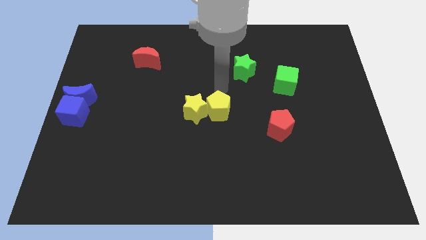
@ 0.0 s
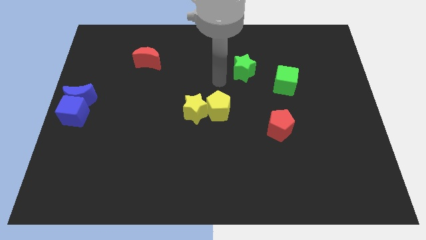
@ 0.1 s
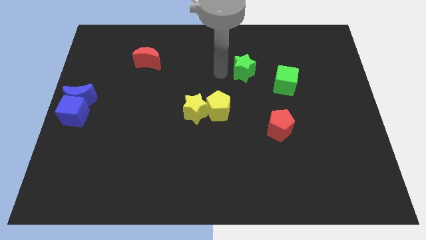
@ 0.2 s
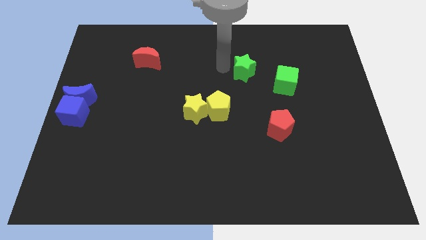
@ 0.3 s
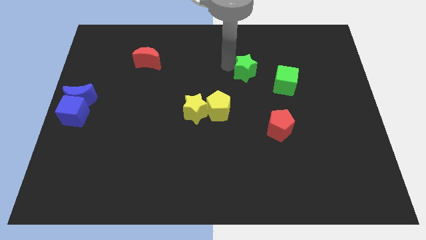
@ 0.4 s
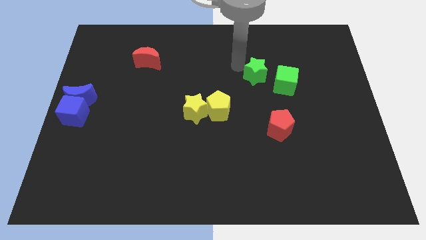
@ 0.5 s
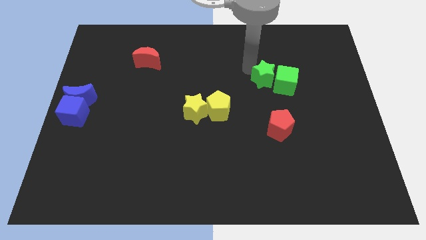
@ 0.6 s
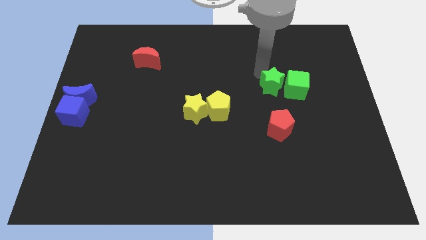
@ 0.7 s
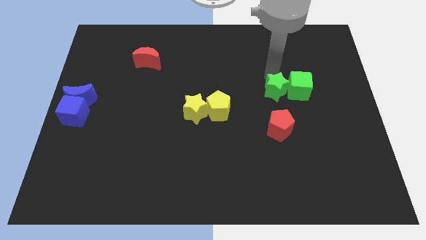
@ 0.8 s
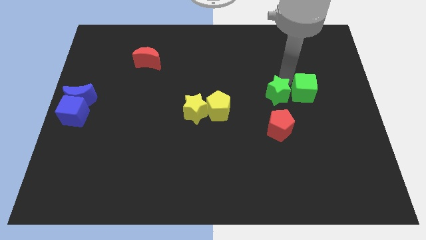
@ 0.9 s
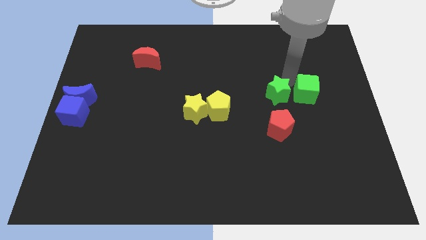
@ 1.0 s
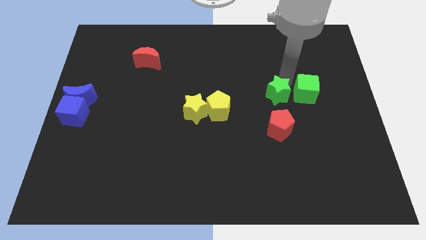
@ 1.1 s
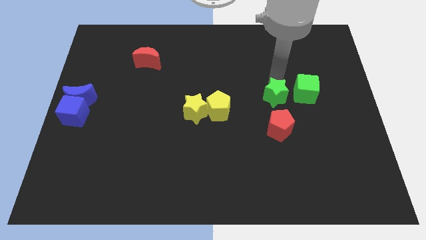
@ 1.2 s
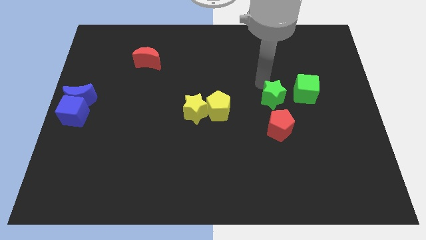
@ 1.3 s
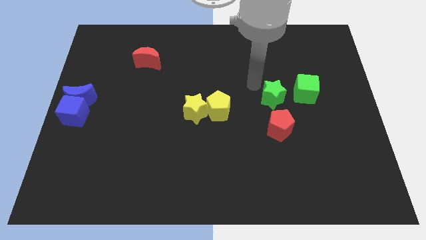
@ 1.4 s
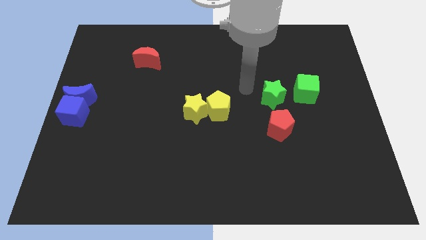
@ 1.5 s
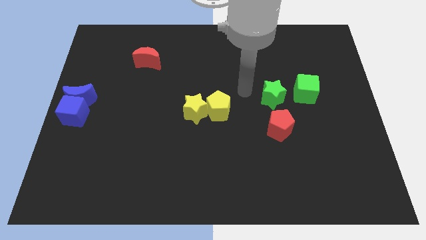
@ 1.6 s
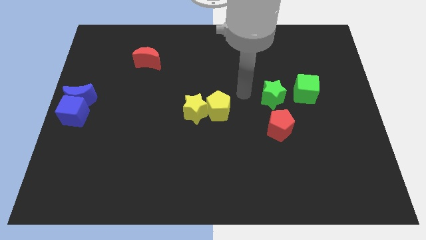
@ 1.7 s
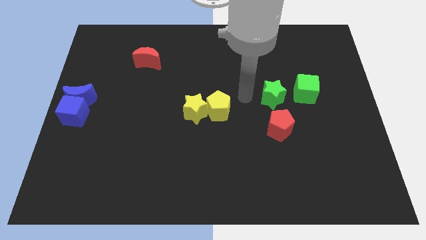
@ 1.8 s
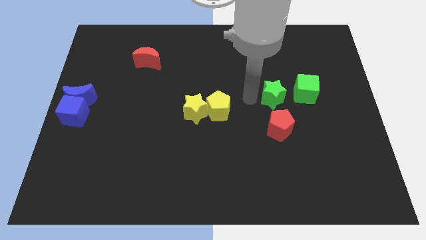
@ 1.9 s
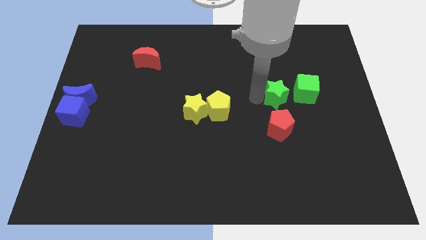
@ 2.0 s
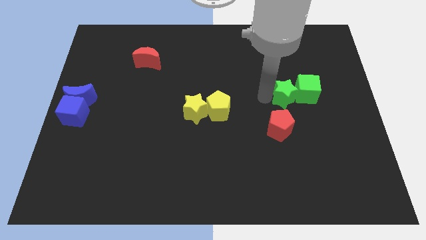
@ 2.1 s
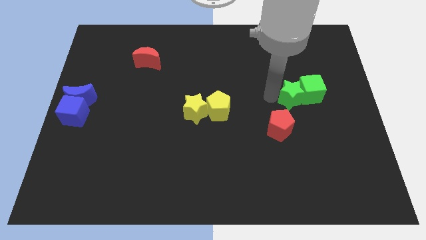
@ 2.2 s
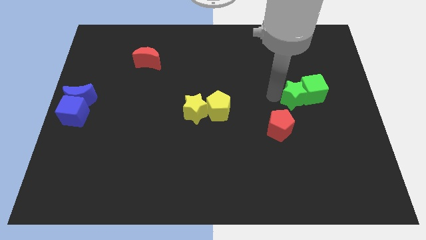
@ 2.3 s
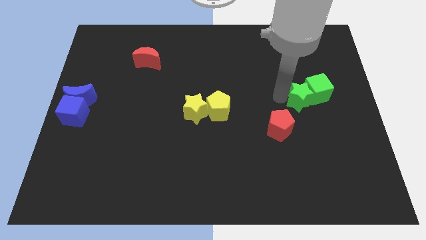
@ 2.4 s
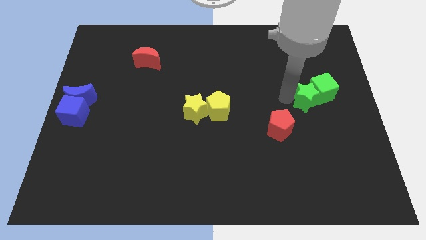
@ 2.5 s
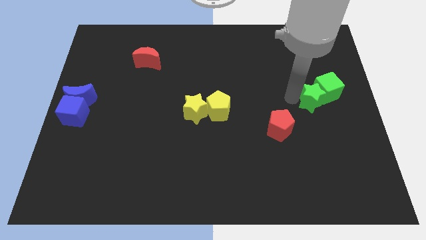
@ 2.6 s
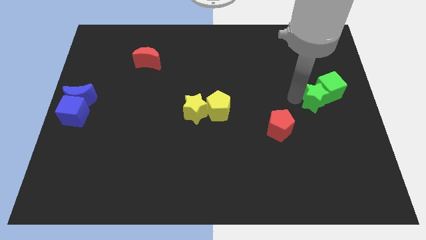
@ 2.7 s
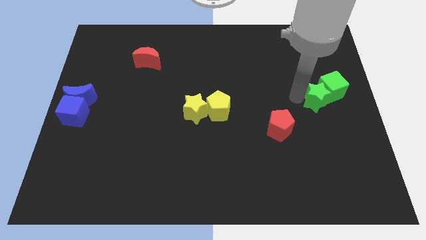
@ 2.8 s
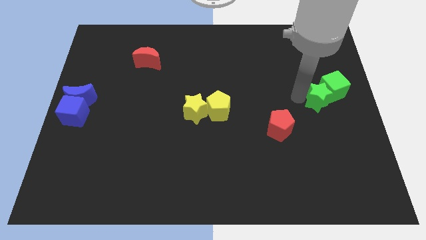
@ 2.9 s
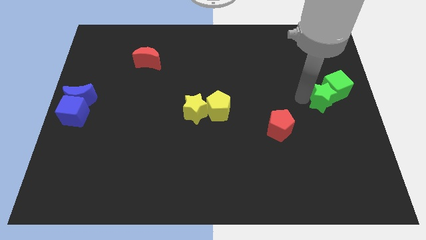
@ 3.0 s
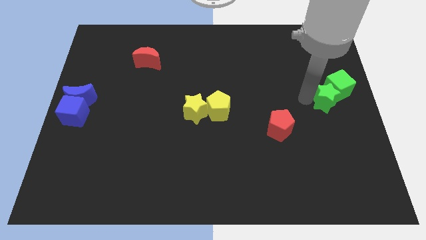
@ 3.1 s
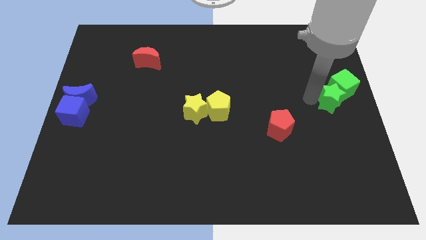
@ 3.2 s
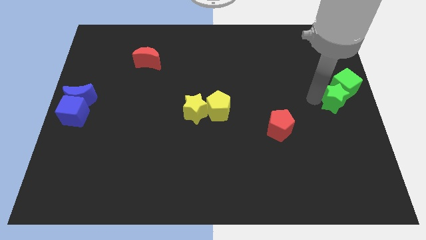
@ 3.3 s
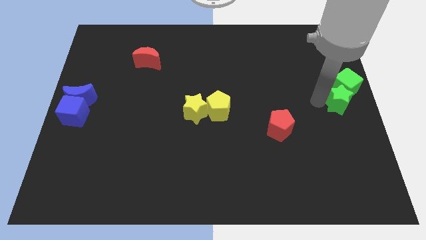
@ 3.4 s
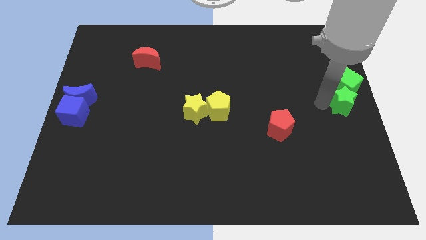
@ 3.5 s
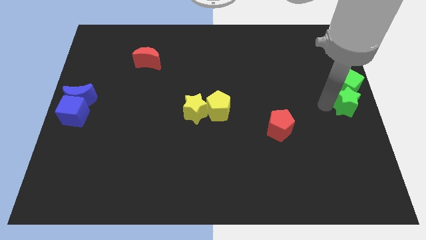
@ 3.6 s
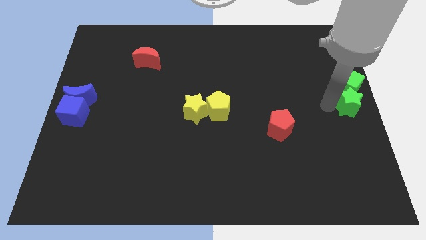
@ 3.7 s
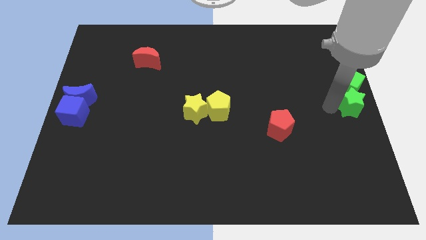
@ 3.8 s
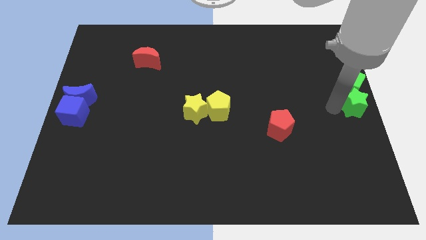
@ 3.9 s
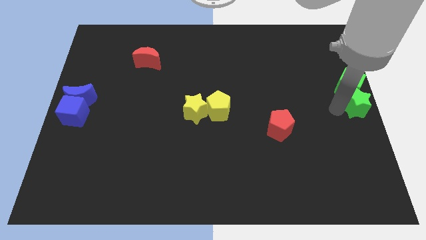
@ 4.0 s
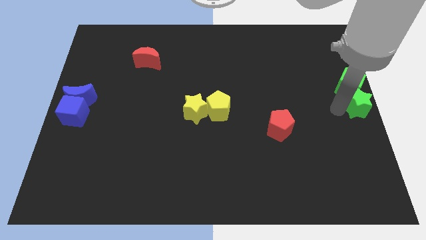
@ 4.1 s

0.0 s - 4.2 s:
push the green blocks to the center right of the board

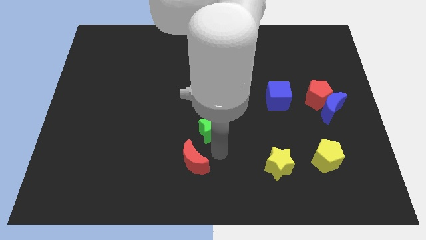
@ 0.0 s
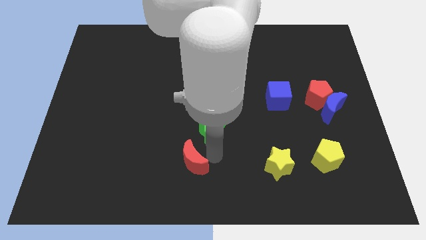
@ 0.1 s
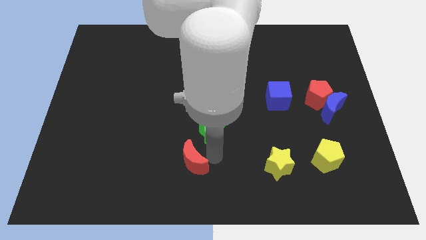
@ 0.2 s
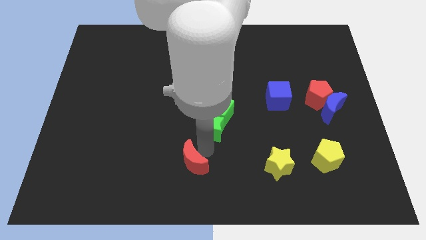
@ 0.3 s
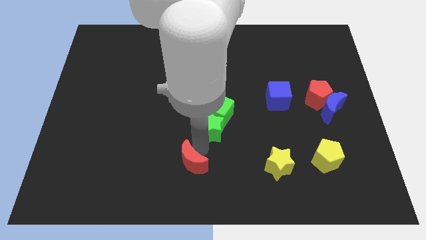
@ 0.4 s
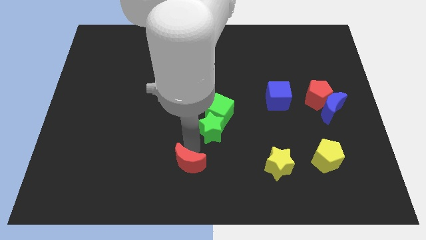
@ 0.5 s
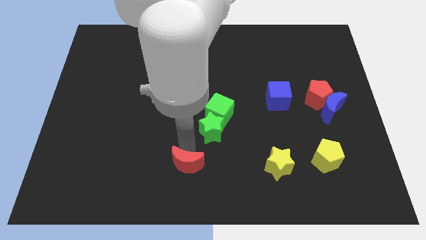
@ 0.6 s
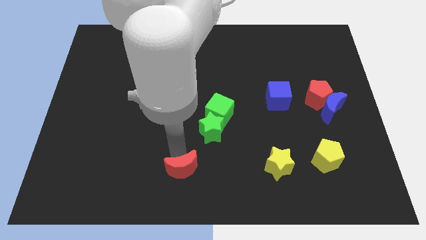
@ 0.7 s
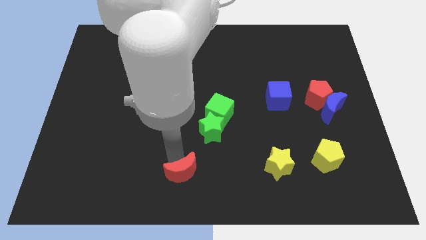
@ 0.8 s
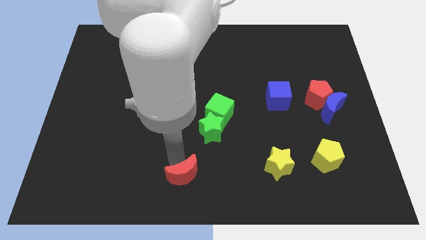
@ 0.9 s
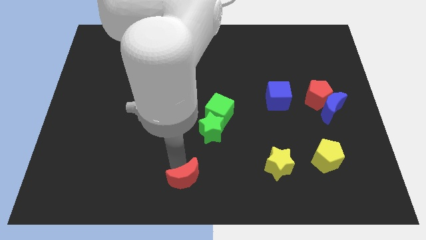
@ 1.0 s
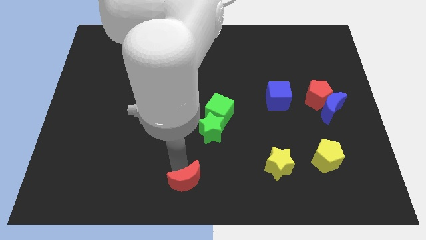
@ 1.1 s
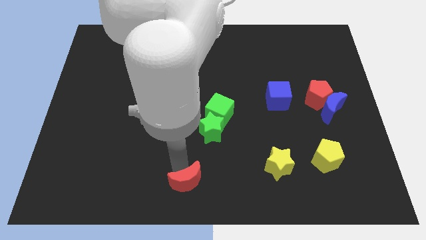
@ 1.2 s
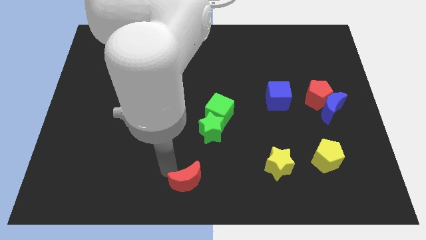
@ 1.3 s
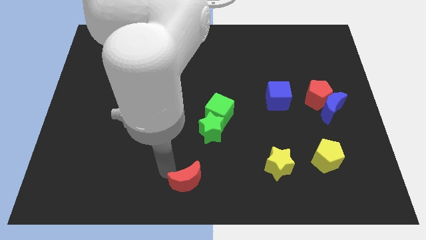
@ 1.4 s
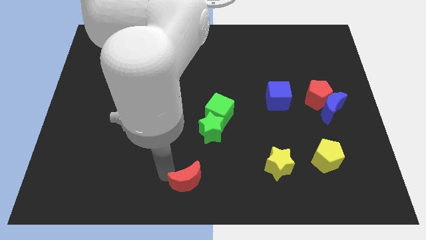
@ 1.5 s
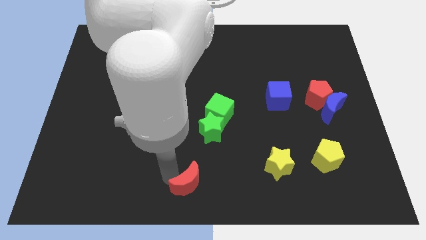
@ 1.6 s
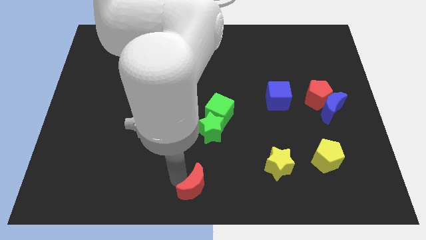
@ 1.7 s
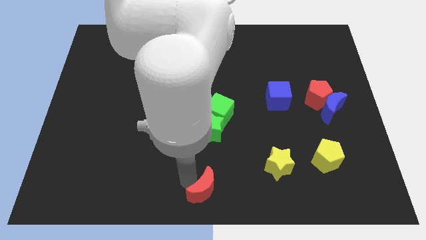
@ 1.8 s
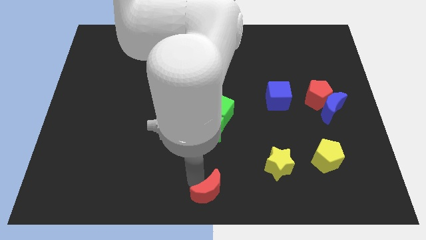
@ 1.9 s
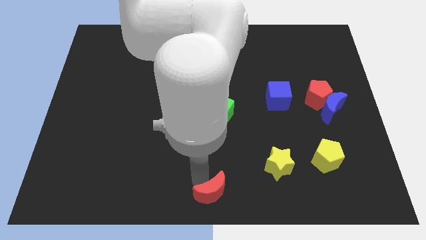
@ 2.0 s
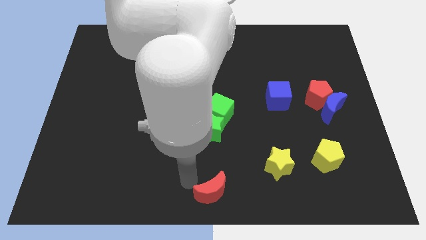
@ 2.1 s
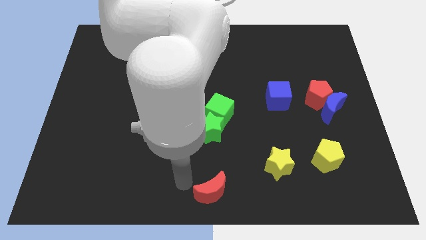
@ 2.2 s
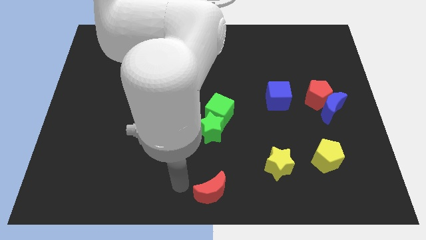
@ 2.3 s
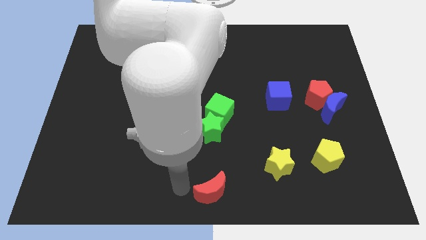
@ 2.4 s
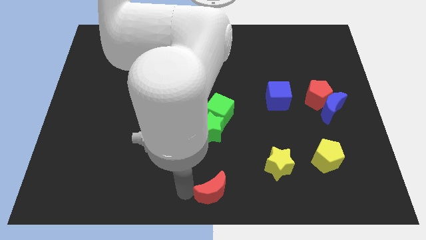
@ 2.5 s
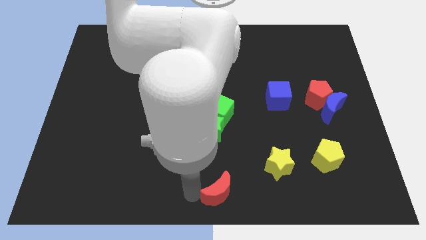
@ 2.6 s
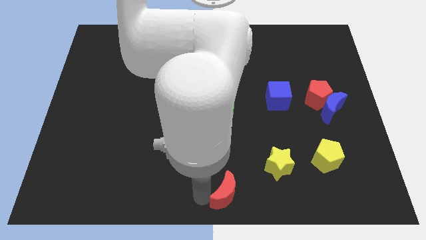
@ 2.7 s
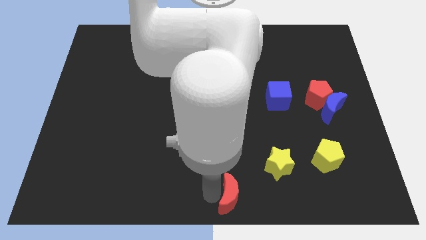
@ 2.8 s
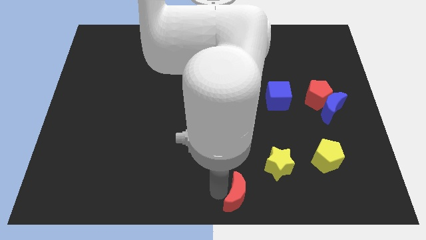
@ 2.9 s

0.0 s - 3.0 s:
put red moon in the bottom center

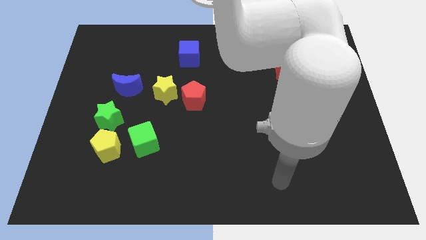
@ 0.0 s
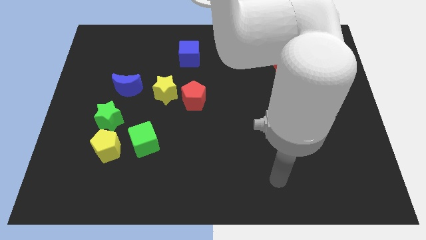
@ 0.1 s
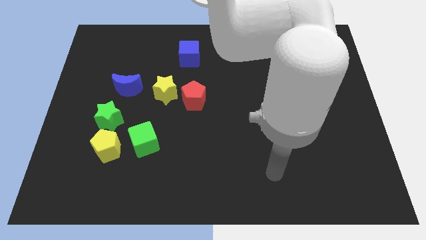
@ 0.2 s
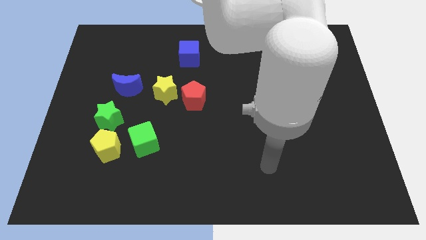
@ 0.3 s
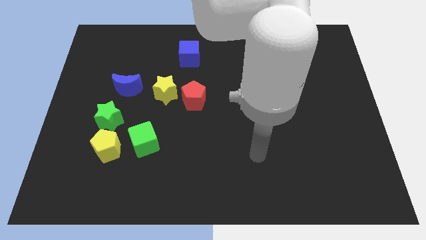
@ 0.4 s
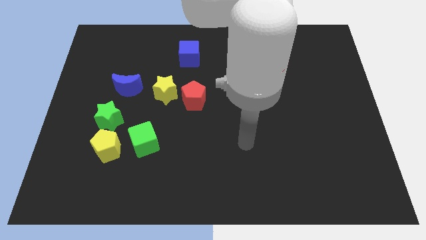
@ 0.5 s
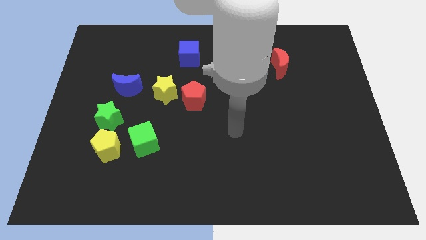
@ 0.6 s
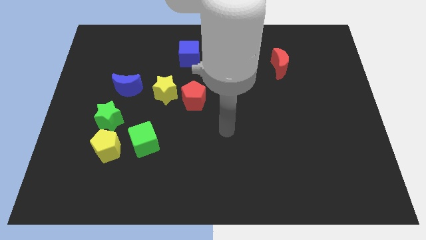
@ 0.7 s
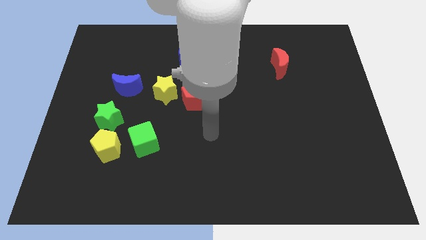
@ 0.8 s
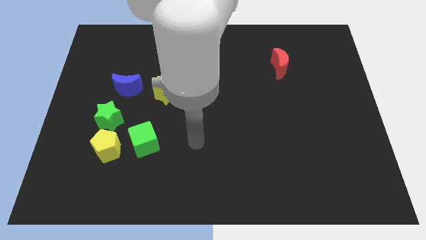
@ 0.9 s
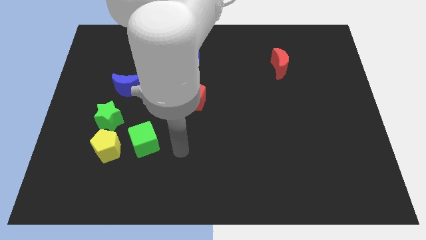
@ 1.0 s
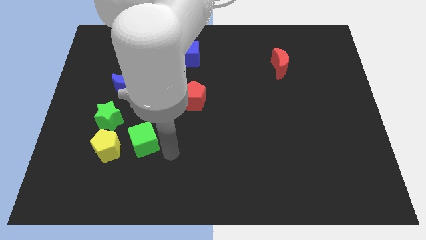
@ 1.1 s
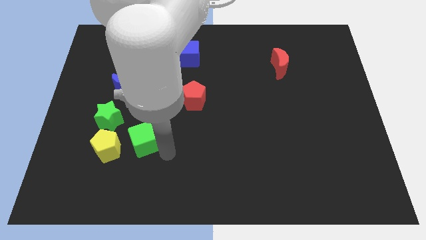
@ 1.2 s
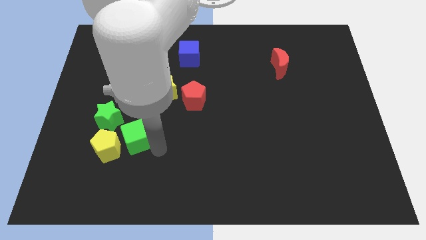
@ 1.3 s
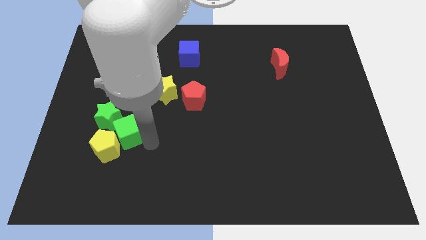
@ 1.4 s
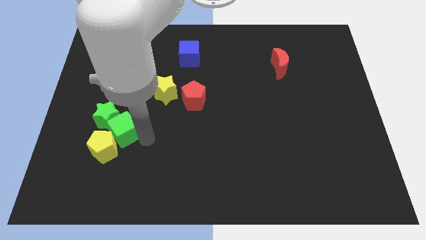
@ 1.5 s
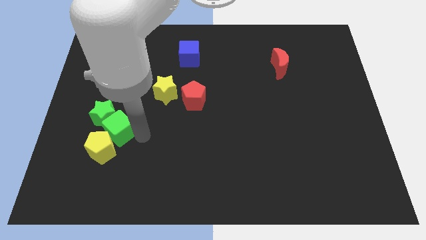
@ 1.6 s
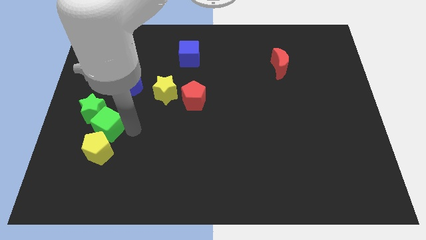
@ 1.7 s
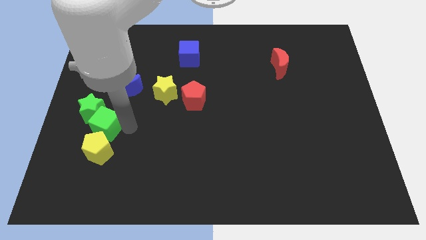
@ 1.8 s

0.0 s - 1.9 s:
move arm near green cube
